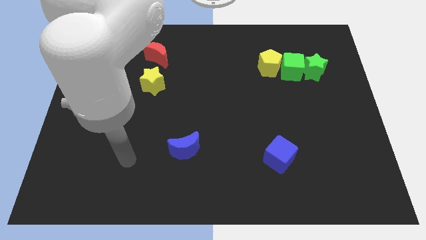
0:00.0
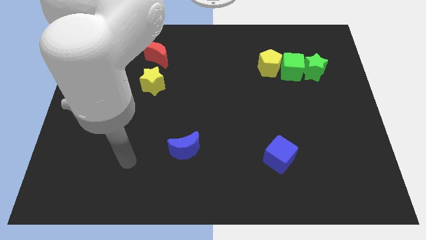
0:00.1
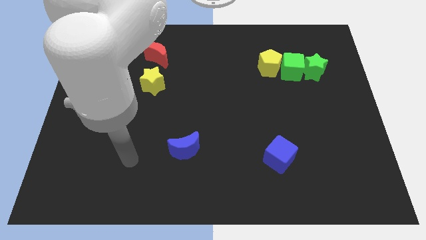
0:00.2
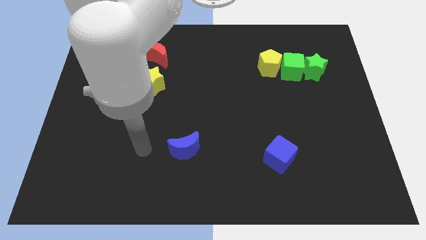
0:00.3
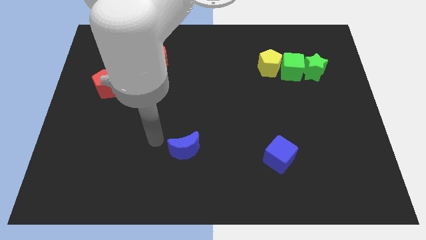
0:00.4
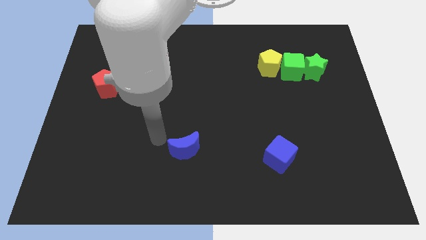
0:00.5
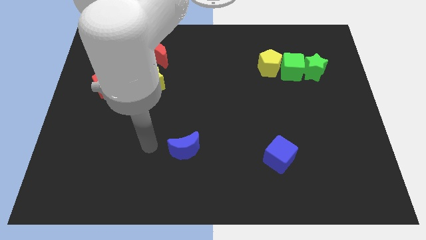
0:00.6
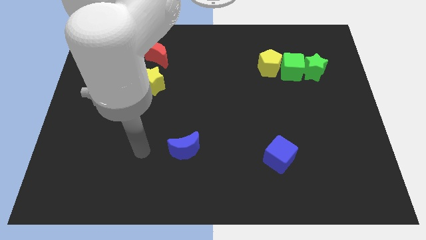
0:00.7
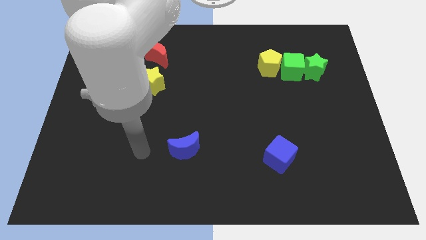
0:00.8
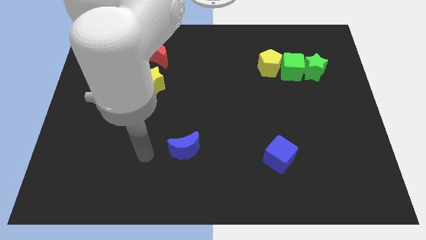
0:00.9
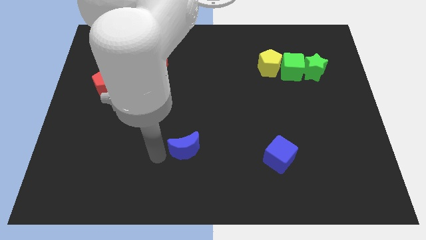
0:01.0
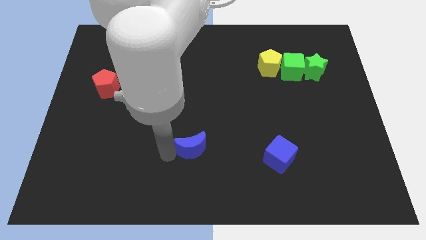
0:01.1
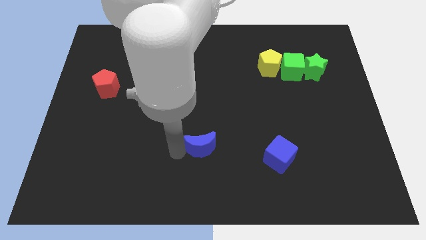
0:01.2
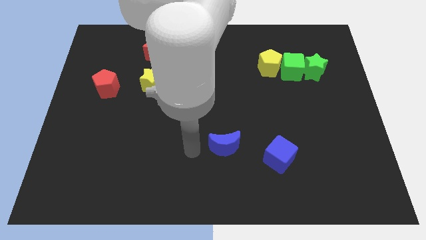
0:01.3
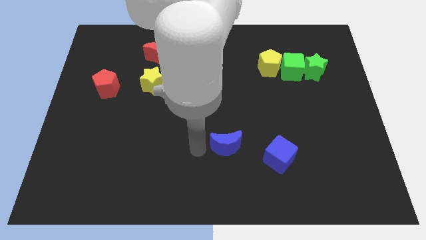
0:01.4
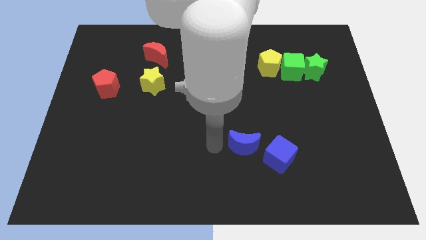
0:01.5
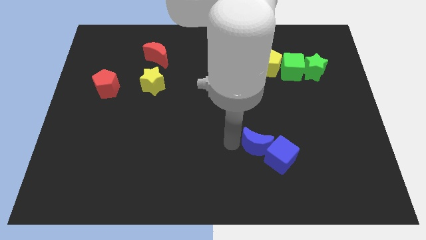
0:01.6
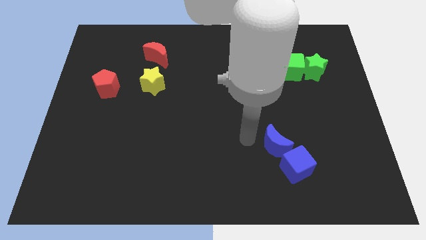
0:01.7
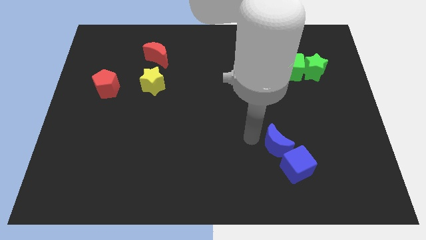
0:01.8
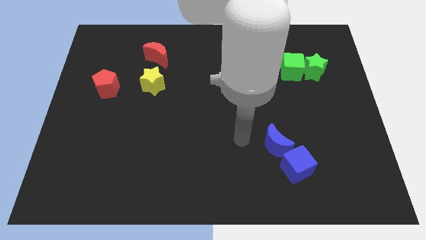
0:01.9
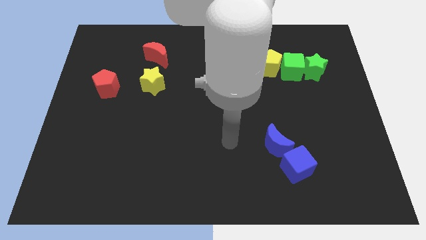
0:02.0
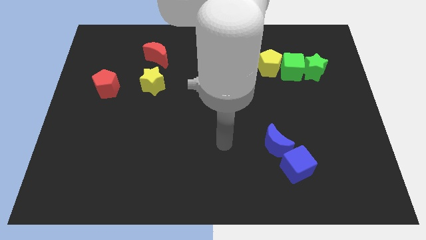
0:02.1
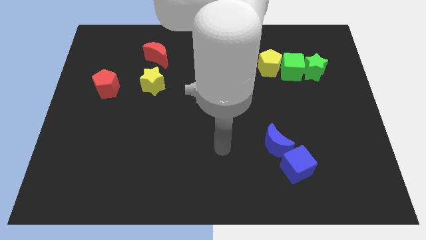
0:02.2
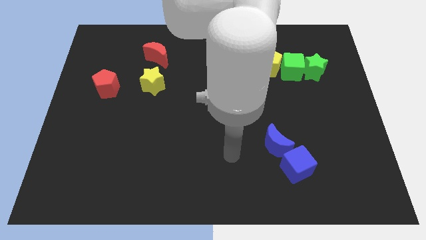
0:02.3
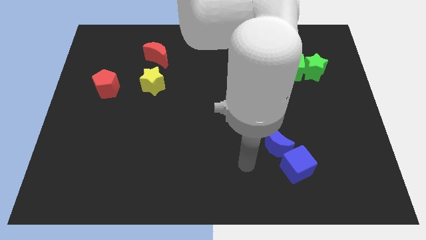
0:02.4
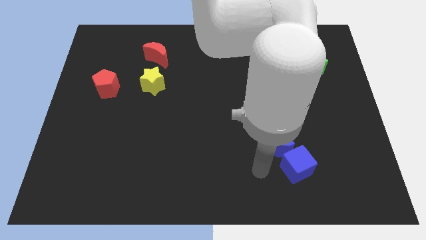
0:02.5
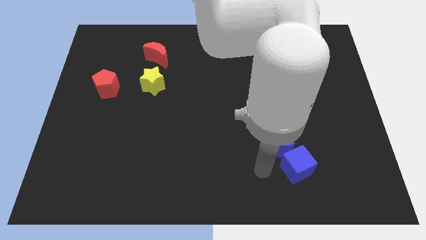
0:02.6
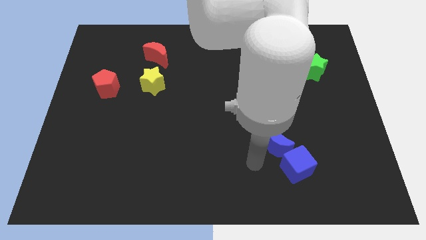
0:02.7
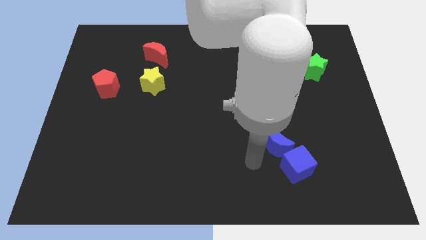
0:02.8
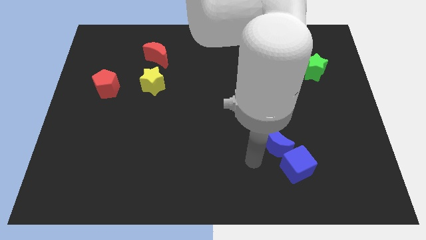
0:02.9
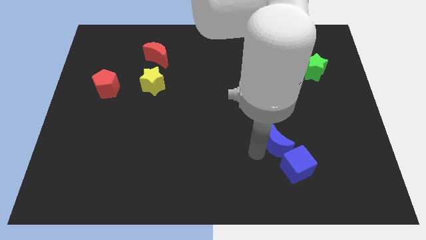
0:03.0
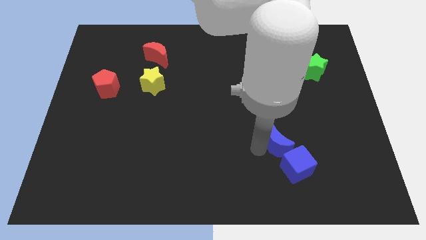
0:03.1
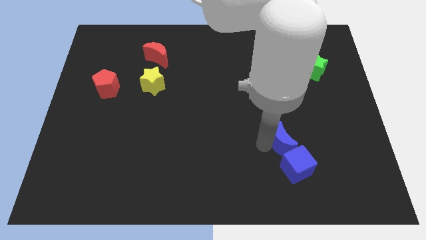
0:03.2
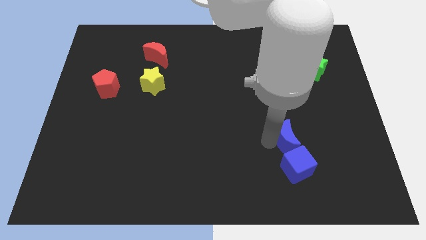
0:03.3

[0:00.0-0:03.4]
move the blue crescent into the blue cube

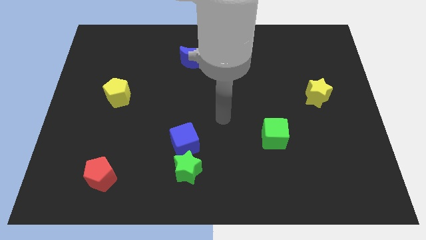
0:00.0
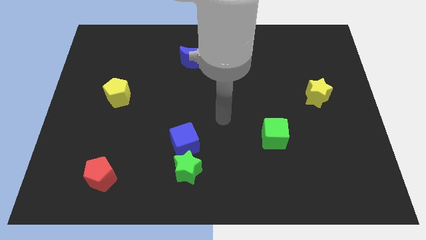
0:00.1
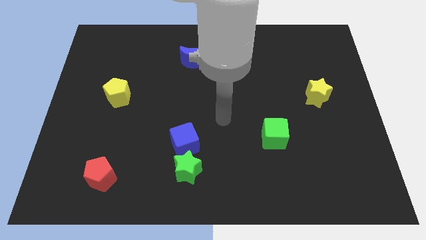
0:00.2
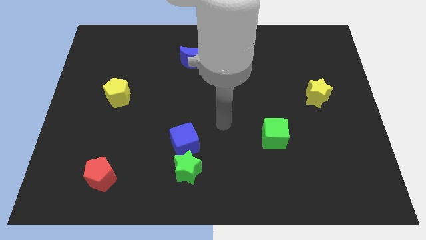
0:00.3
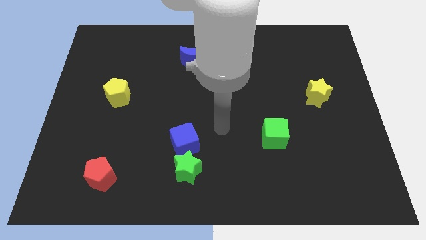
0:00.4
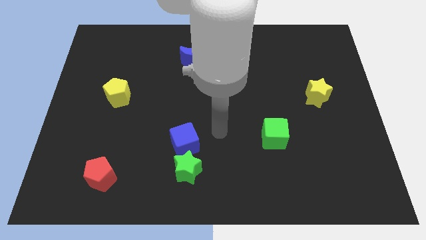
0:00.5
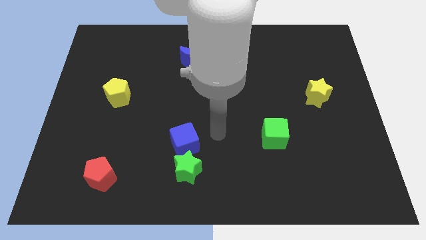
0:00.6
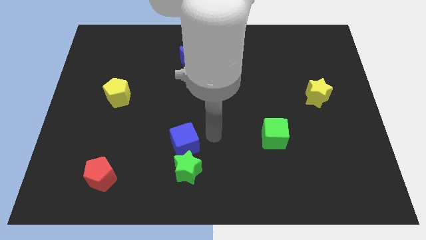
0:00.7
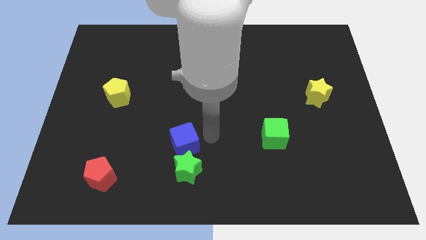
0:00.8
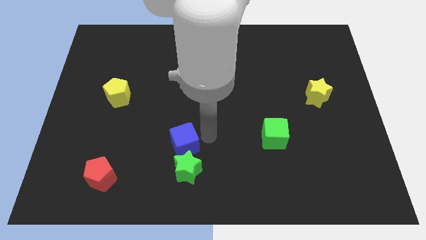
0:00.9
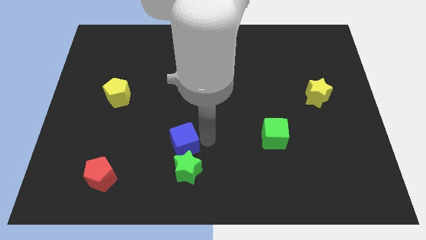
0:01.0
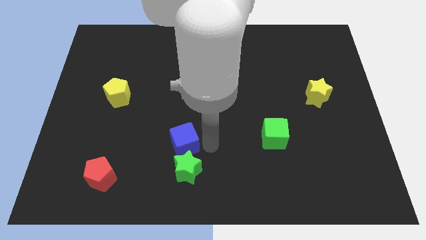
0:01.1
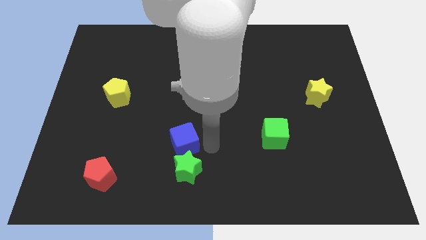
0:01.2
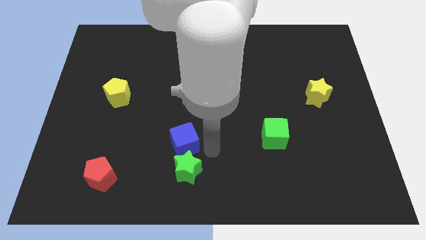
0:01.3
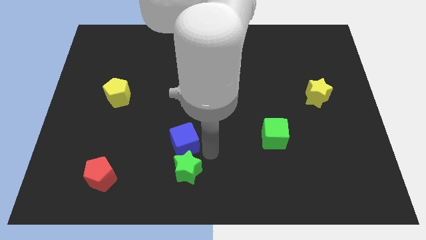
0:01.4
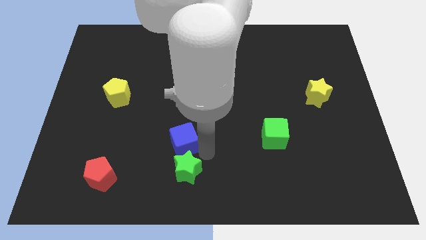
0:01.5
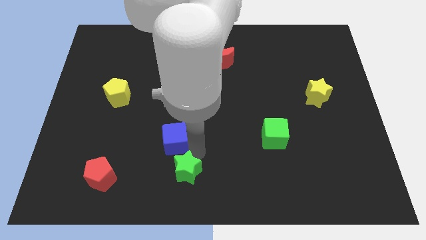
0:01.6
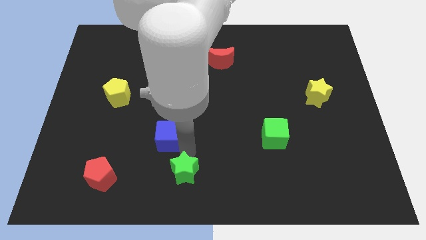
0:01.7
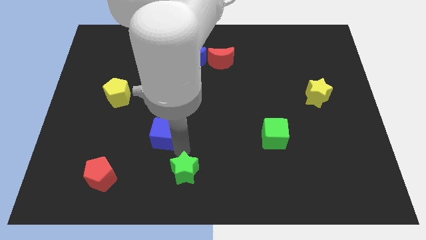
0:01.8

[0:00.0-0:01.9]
separate the blue cube and the green star

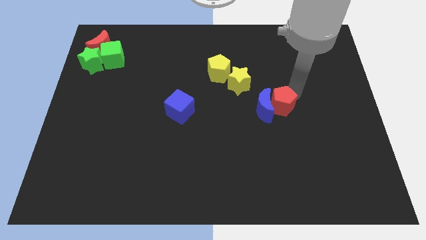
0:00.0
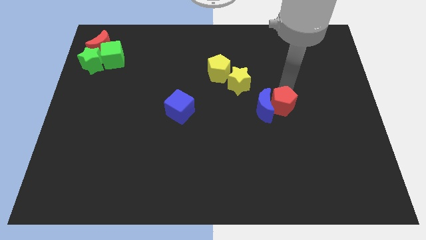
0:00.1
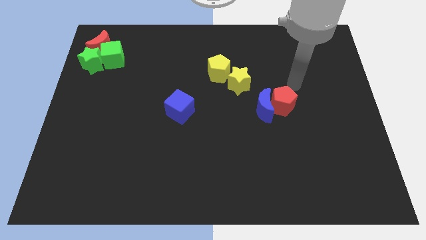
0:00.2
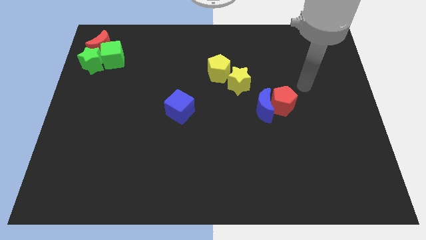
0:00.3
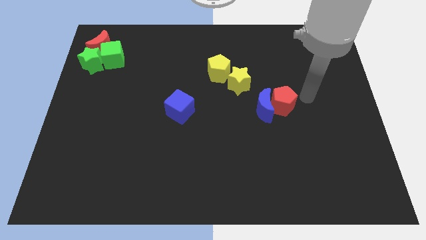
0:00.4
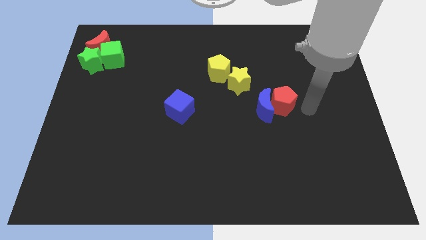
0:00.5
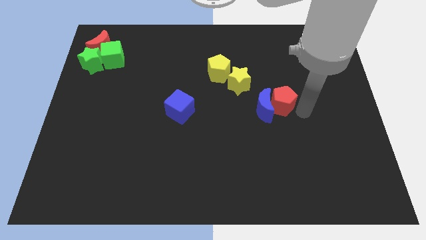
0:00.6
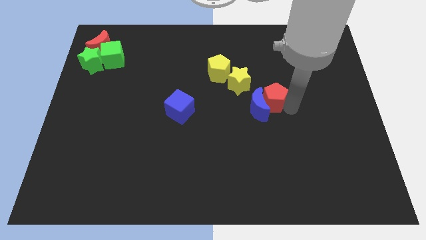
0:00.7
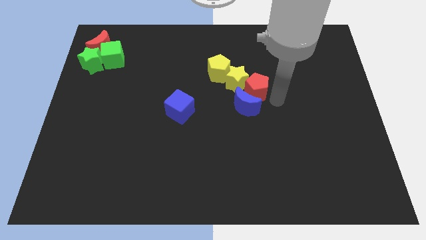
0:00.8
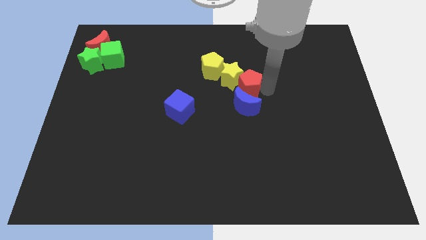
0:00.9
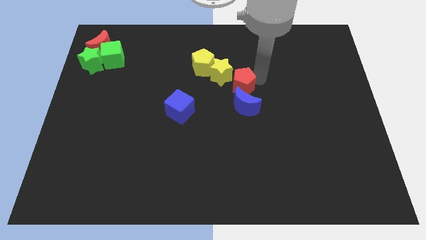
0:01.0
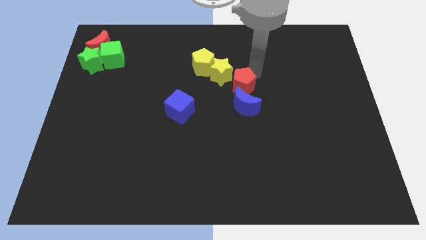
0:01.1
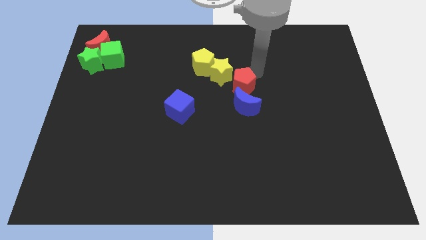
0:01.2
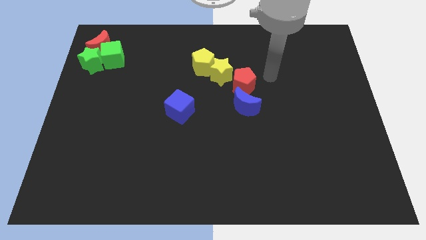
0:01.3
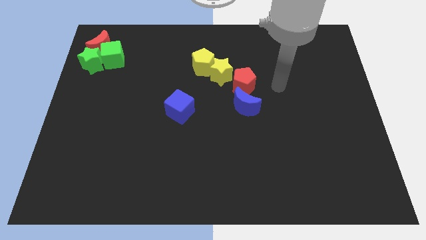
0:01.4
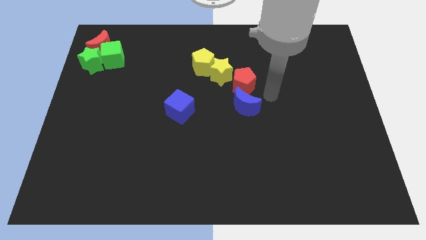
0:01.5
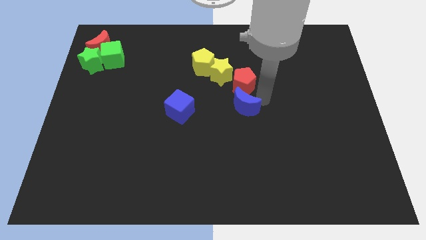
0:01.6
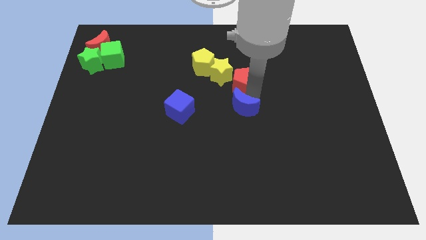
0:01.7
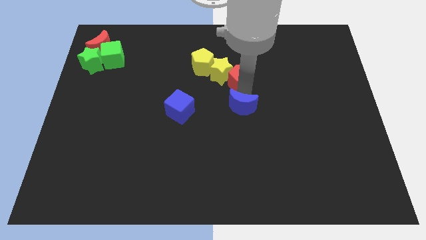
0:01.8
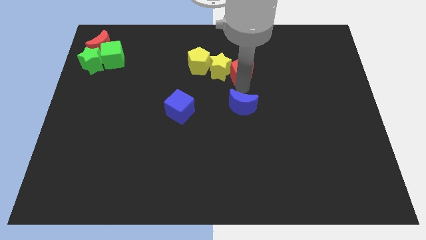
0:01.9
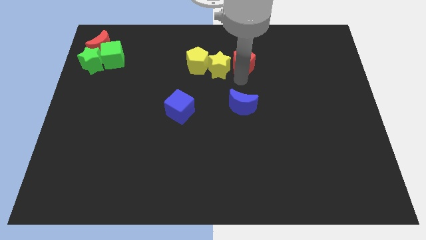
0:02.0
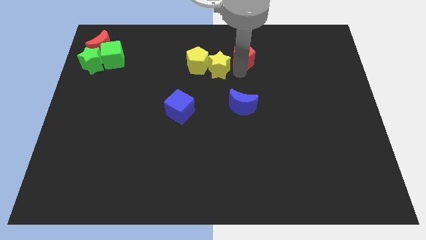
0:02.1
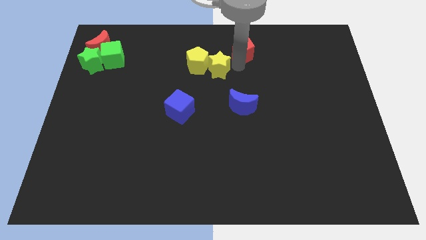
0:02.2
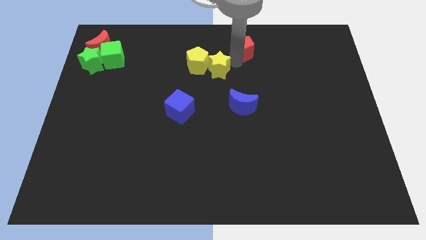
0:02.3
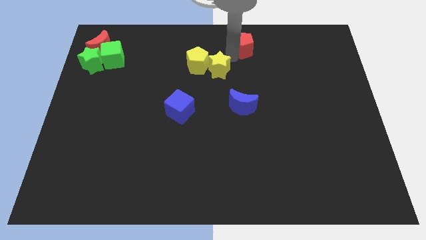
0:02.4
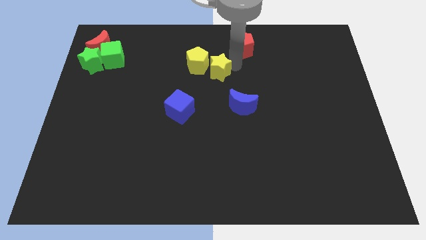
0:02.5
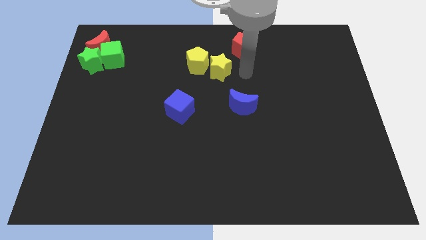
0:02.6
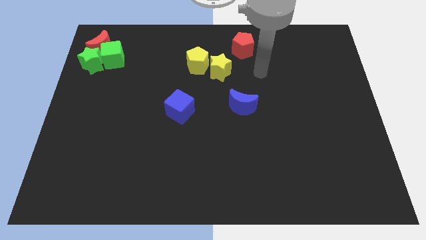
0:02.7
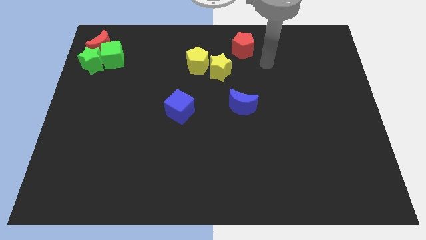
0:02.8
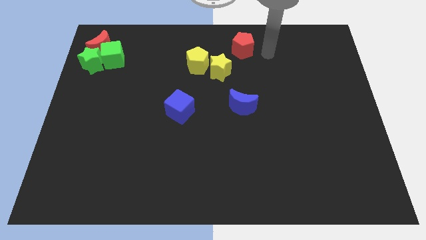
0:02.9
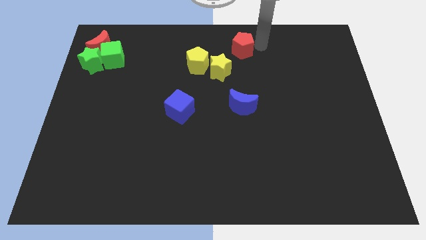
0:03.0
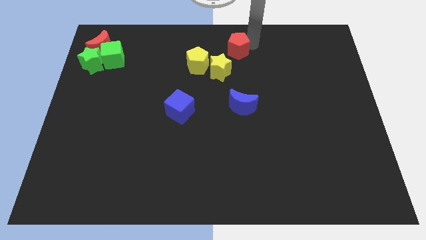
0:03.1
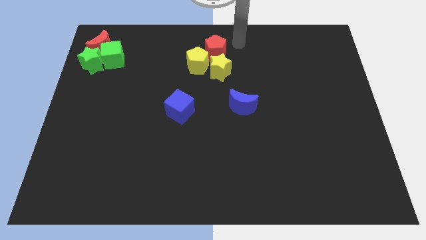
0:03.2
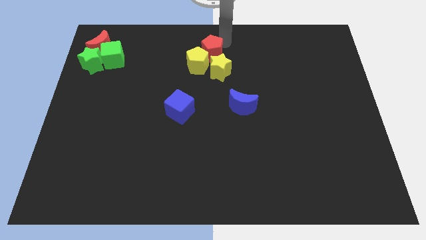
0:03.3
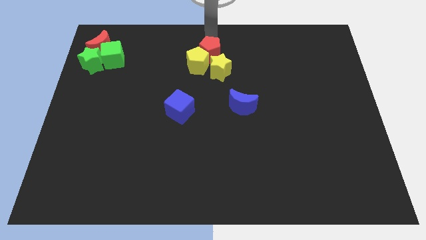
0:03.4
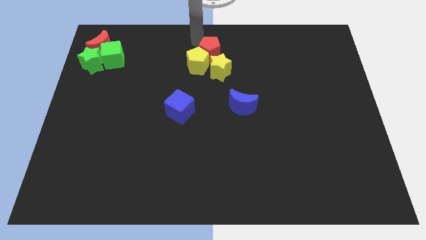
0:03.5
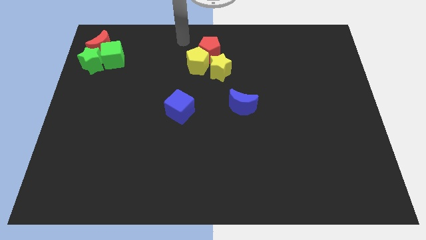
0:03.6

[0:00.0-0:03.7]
move the red pentagon on top of yellow pentagon
